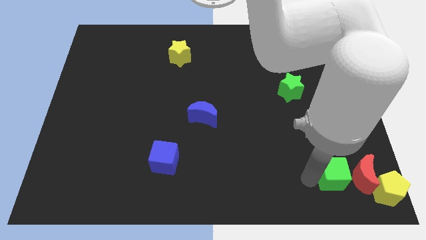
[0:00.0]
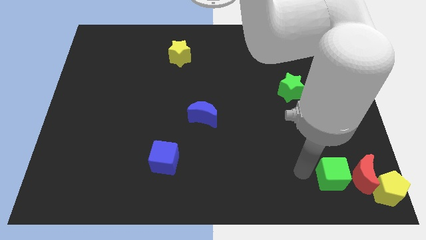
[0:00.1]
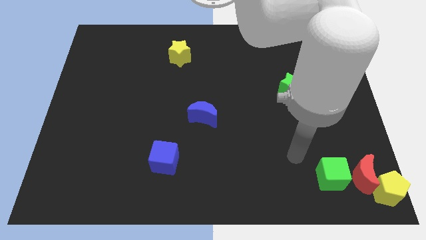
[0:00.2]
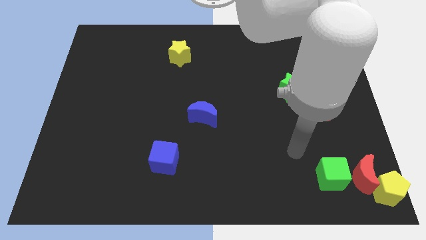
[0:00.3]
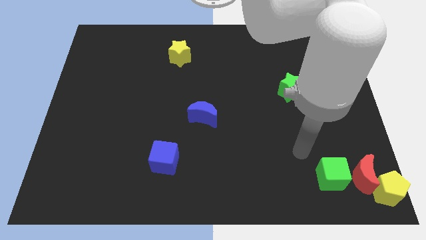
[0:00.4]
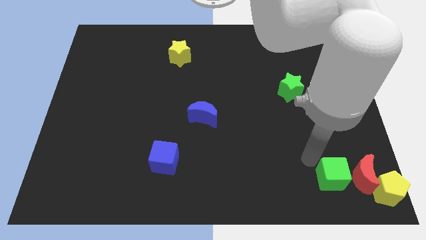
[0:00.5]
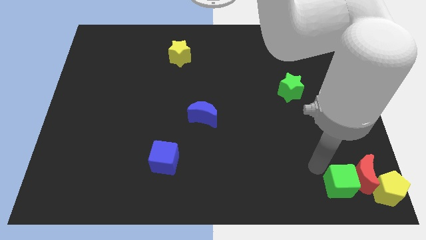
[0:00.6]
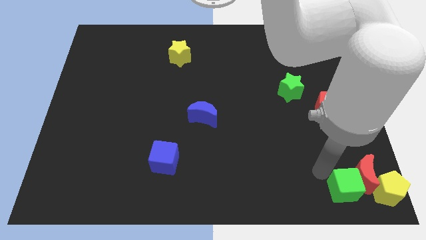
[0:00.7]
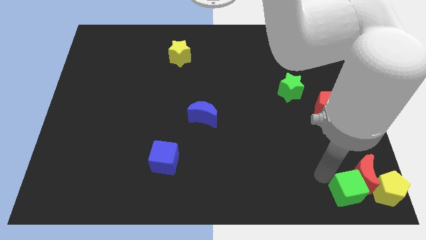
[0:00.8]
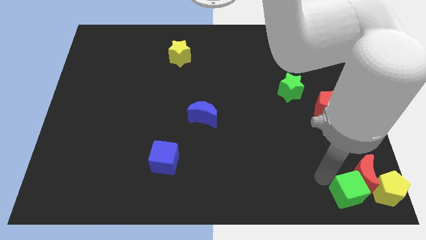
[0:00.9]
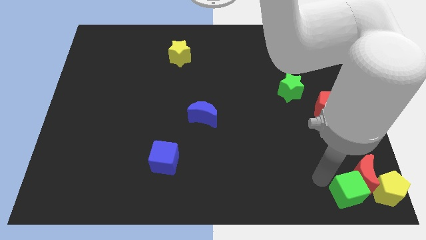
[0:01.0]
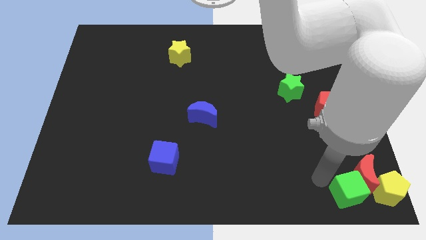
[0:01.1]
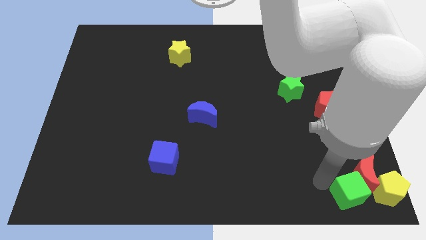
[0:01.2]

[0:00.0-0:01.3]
push the green cube close to the red crescent

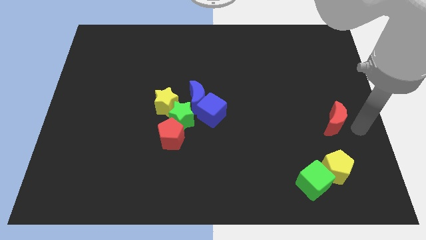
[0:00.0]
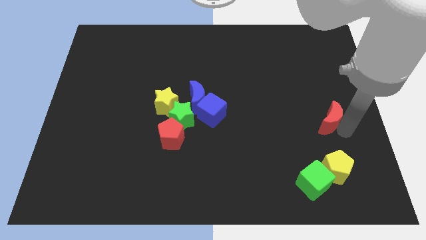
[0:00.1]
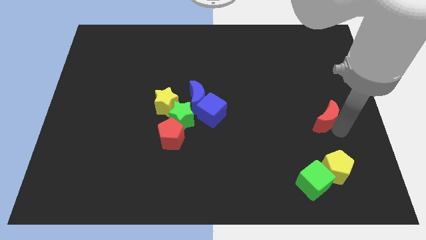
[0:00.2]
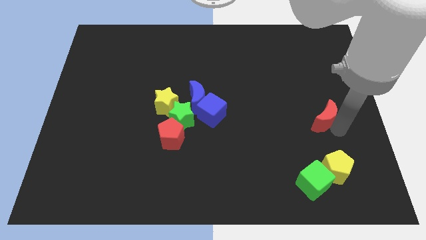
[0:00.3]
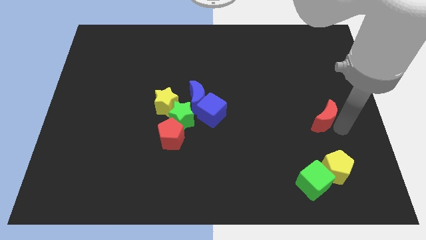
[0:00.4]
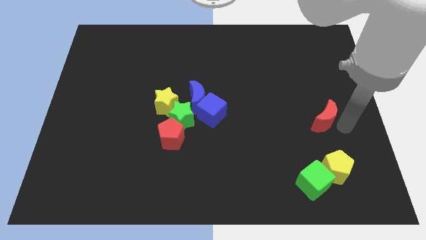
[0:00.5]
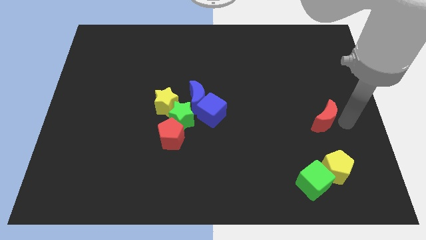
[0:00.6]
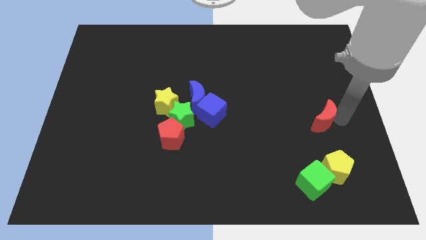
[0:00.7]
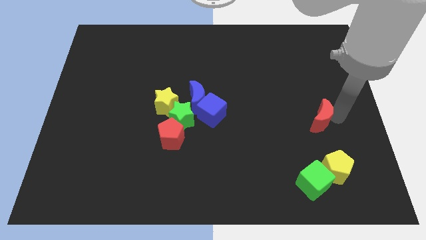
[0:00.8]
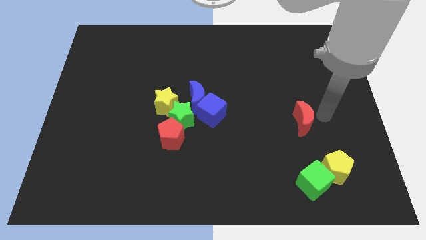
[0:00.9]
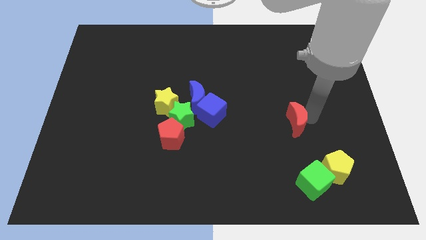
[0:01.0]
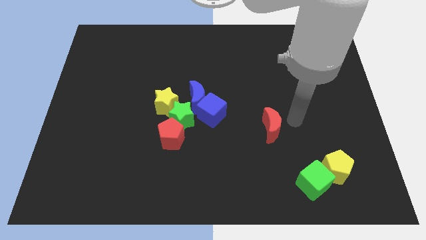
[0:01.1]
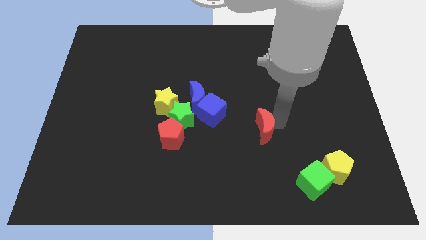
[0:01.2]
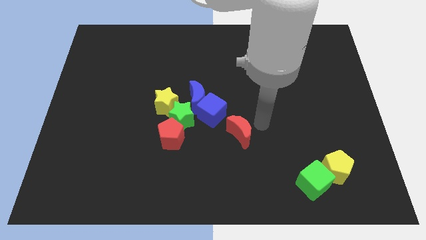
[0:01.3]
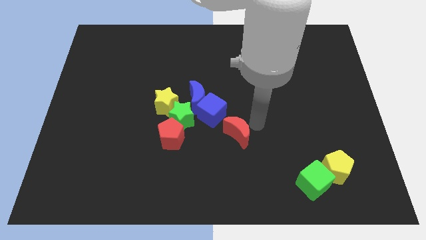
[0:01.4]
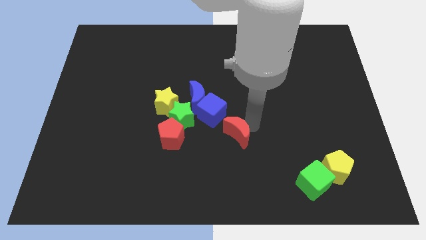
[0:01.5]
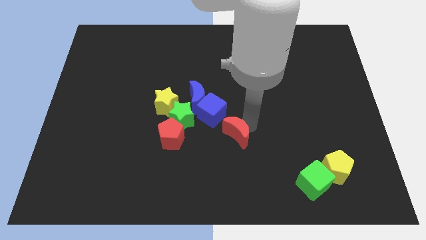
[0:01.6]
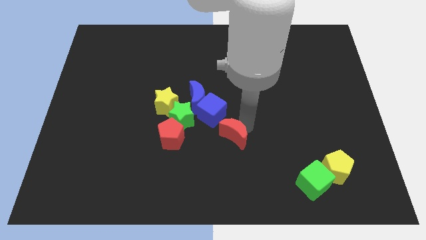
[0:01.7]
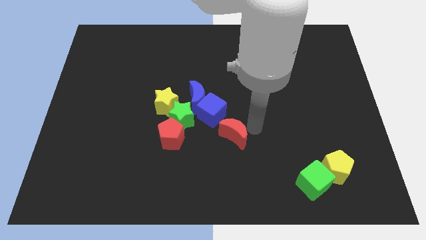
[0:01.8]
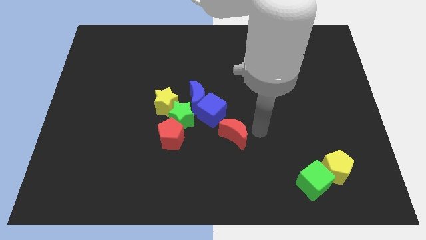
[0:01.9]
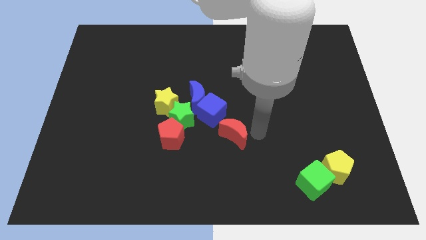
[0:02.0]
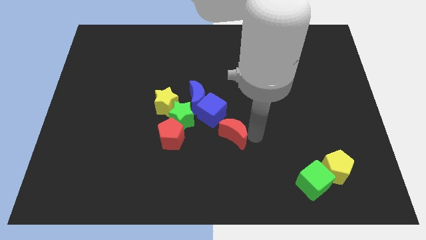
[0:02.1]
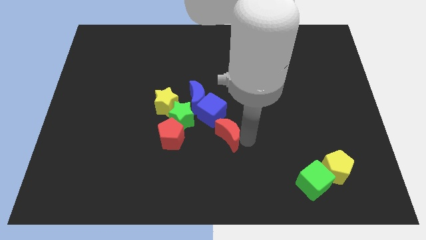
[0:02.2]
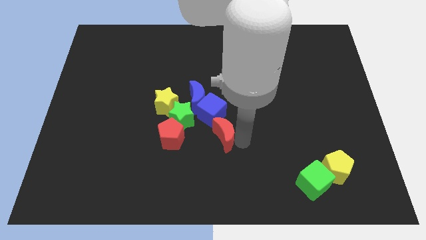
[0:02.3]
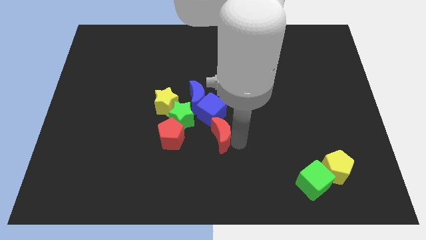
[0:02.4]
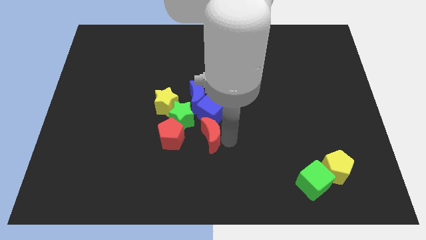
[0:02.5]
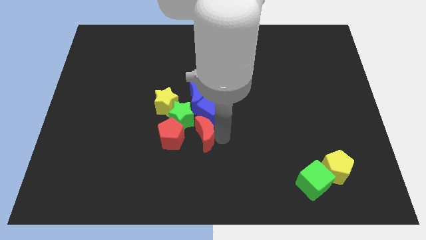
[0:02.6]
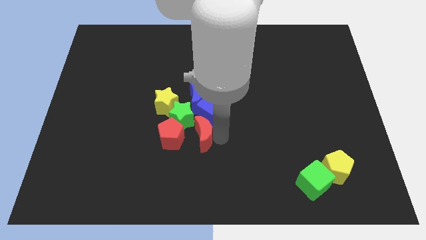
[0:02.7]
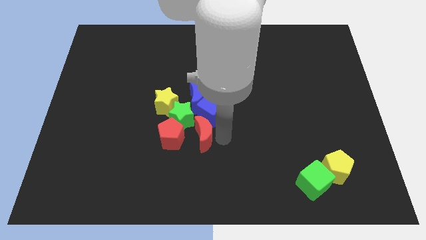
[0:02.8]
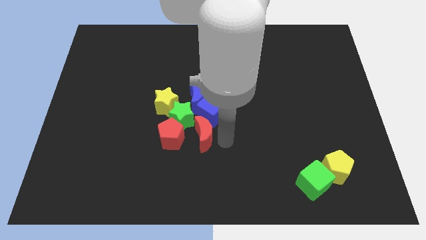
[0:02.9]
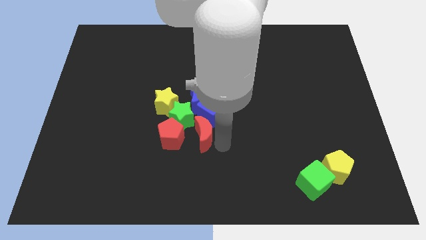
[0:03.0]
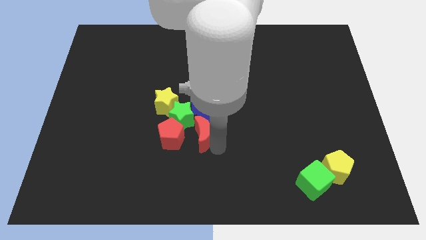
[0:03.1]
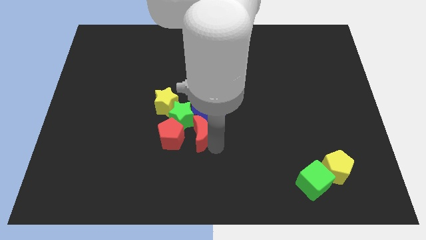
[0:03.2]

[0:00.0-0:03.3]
push the red moon to the right side of the red pentagon

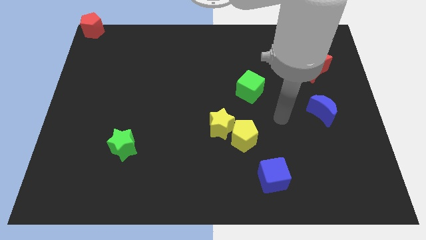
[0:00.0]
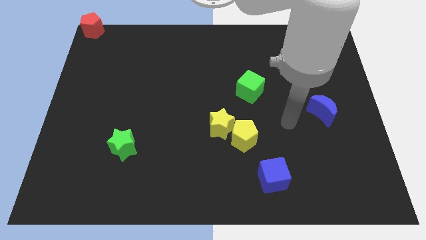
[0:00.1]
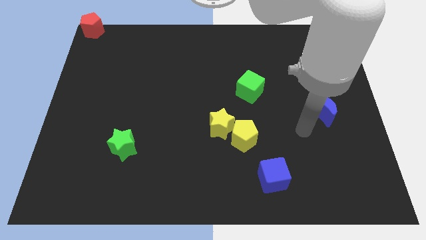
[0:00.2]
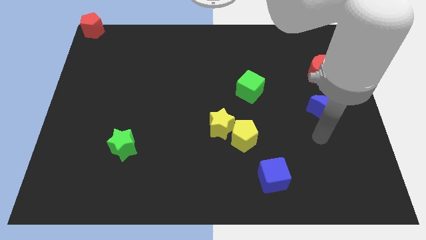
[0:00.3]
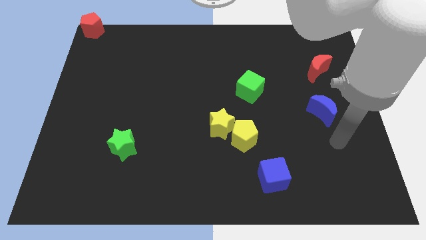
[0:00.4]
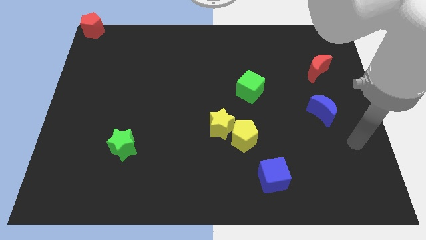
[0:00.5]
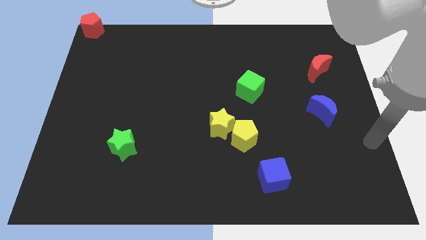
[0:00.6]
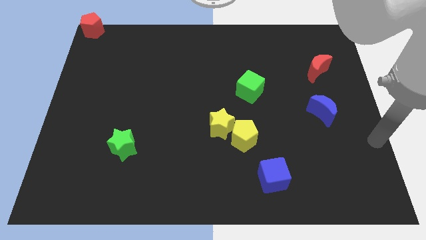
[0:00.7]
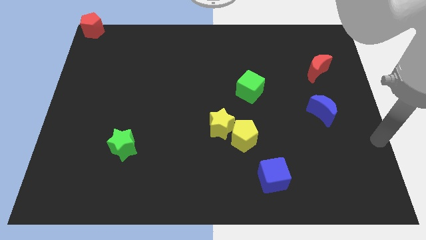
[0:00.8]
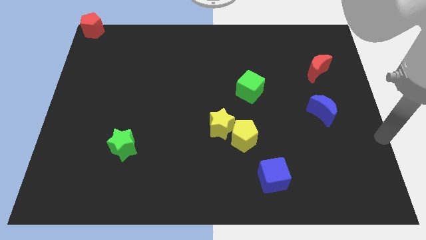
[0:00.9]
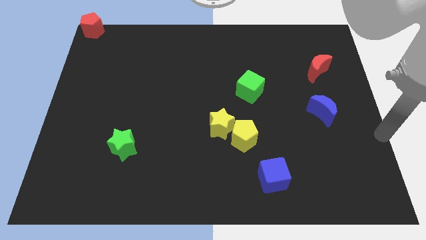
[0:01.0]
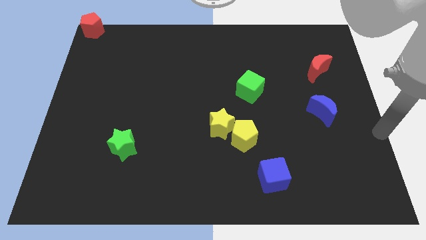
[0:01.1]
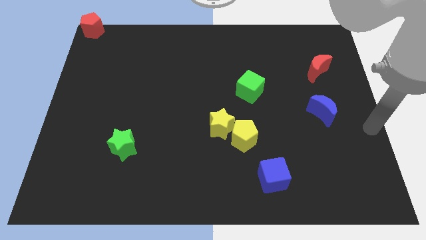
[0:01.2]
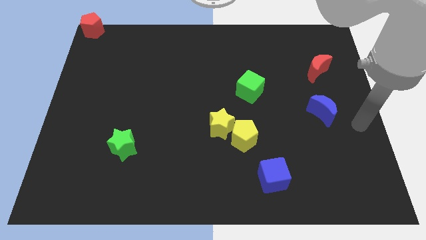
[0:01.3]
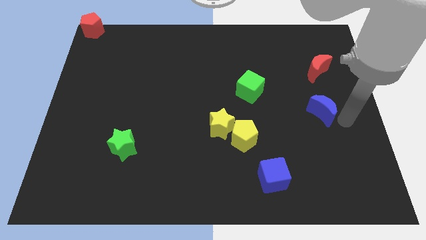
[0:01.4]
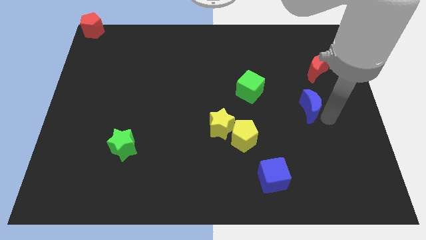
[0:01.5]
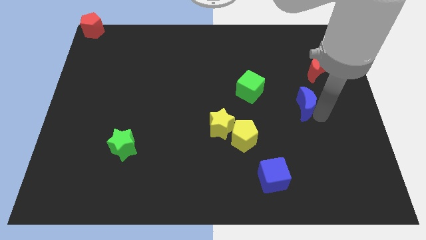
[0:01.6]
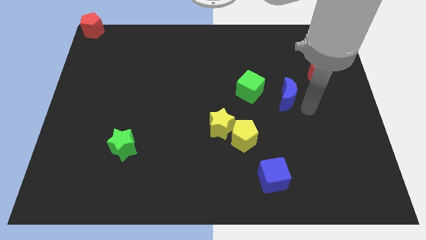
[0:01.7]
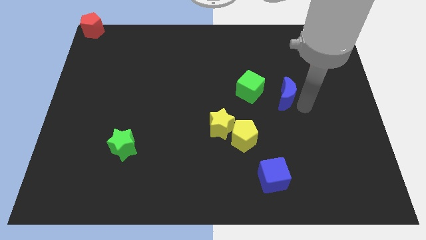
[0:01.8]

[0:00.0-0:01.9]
move the arm towards the blue crescent

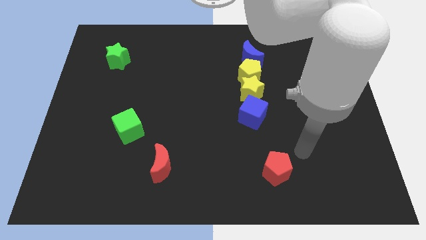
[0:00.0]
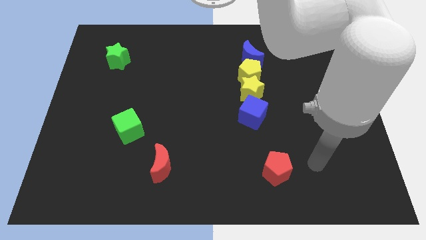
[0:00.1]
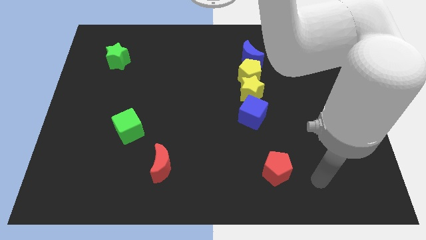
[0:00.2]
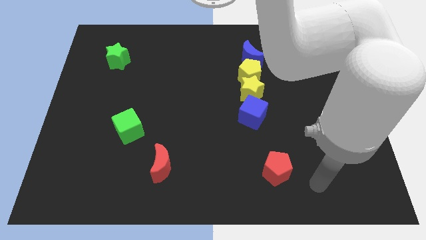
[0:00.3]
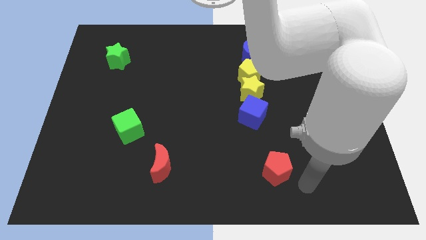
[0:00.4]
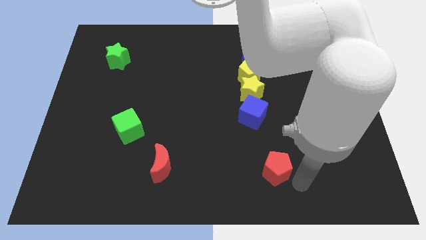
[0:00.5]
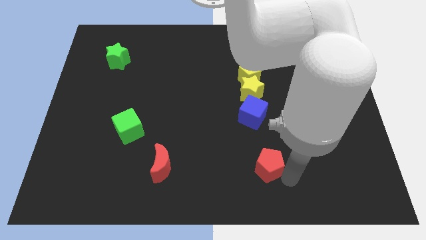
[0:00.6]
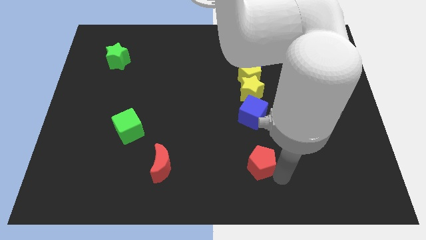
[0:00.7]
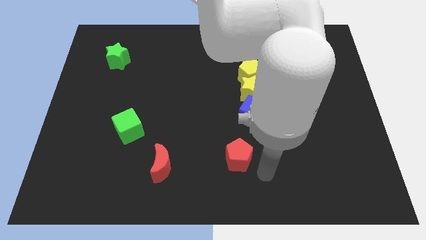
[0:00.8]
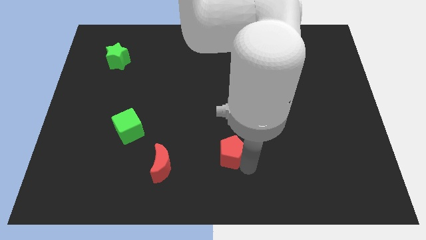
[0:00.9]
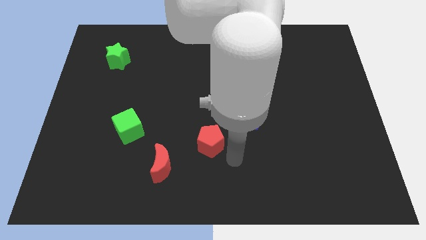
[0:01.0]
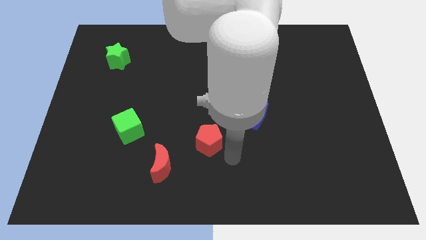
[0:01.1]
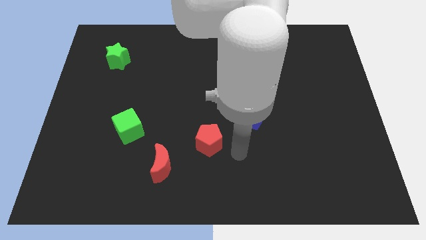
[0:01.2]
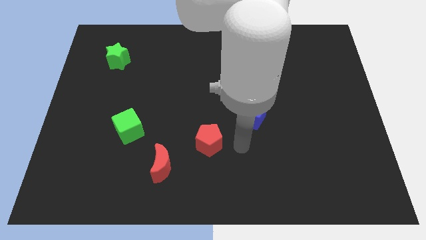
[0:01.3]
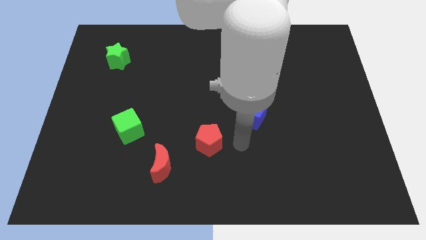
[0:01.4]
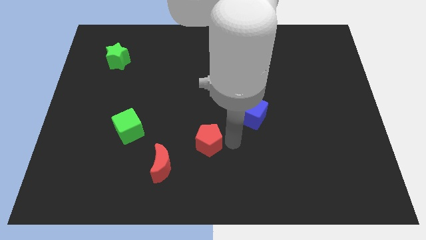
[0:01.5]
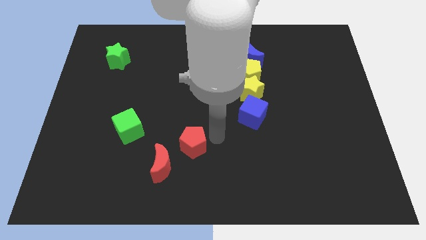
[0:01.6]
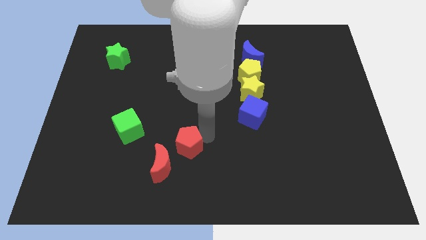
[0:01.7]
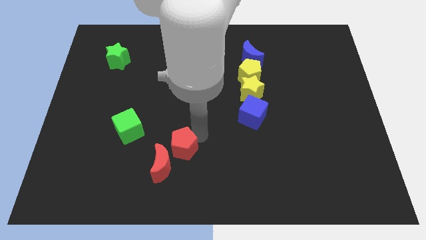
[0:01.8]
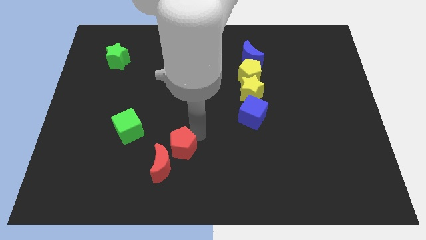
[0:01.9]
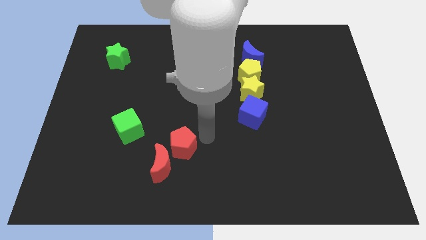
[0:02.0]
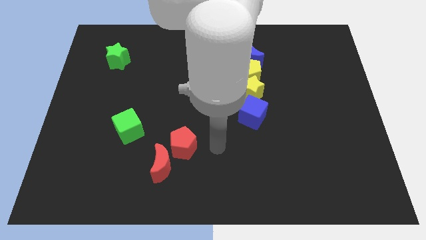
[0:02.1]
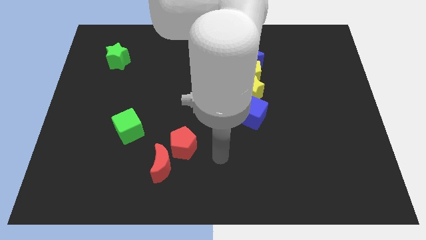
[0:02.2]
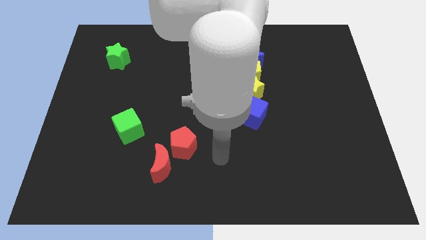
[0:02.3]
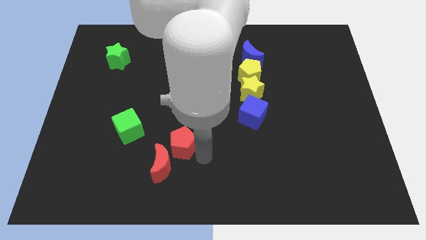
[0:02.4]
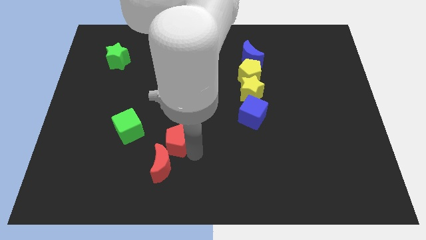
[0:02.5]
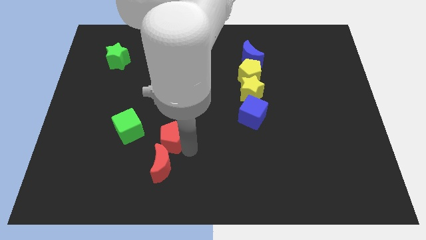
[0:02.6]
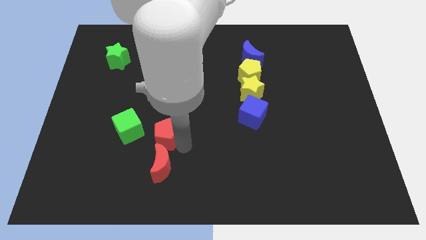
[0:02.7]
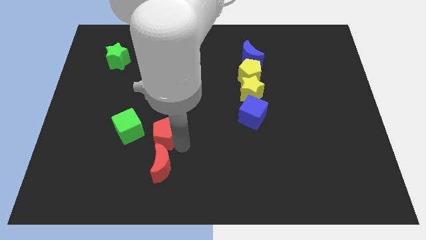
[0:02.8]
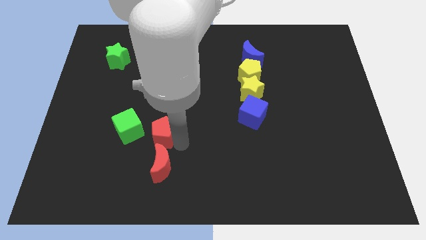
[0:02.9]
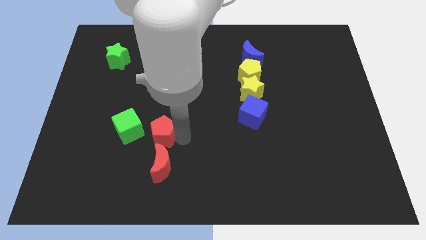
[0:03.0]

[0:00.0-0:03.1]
place red pentagon to the top of the red moon
